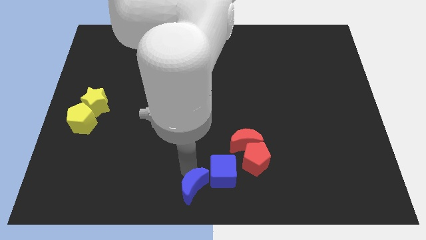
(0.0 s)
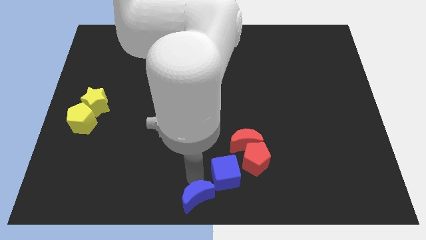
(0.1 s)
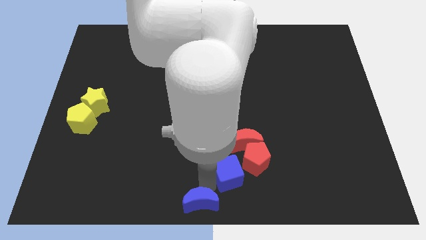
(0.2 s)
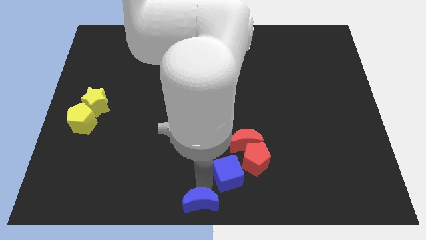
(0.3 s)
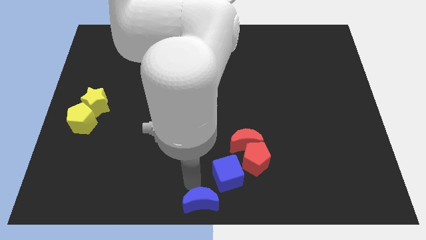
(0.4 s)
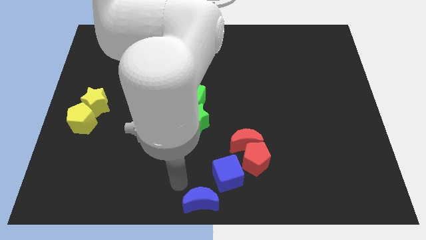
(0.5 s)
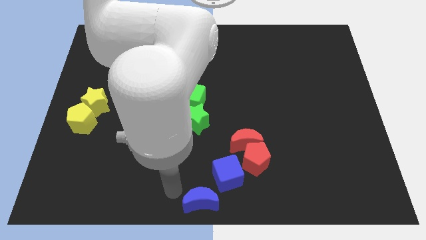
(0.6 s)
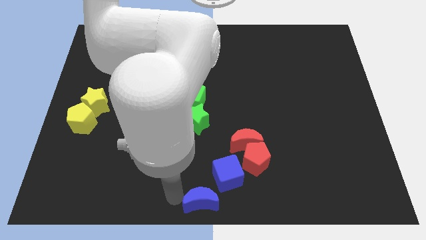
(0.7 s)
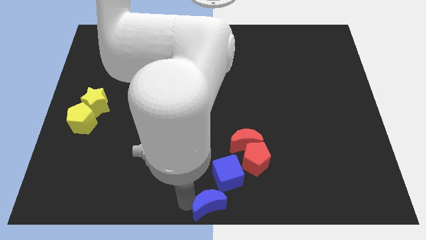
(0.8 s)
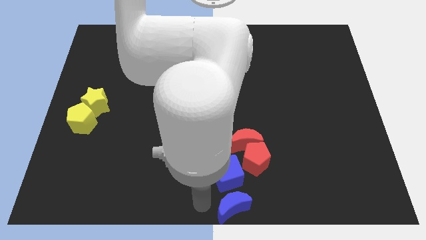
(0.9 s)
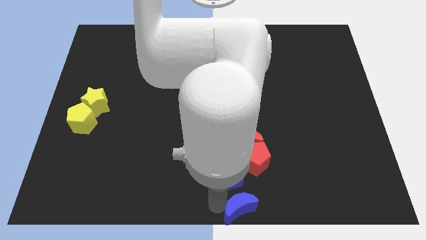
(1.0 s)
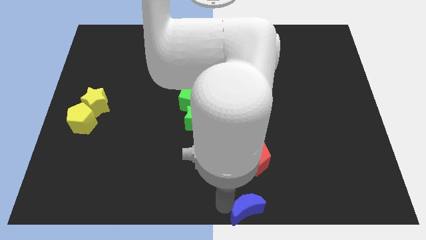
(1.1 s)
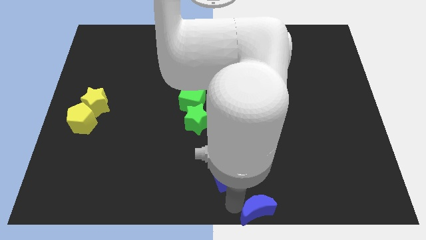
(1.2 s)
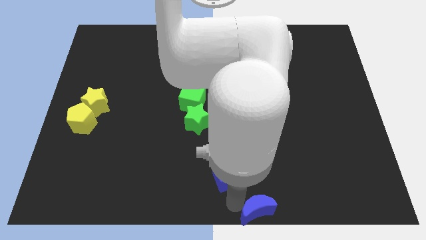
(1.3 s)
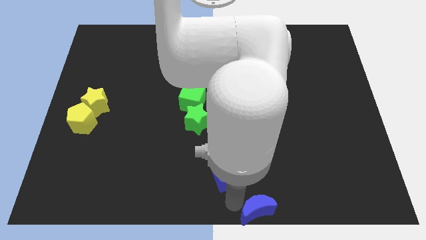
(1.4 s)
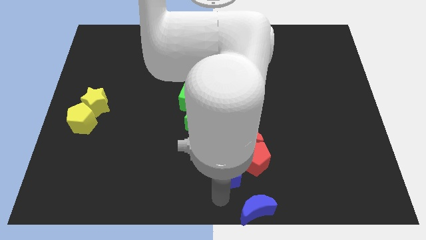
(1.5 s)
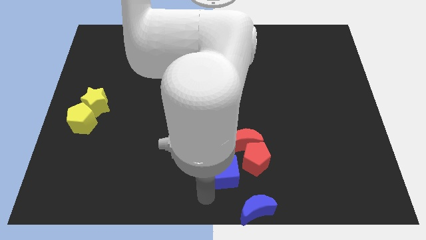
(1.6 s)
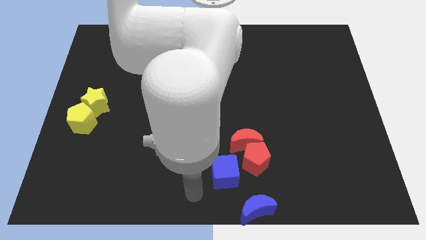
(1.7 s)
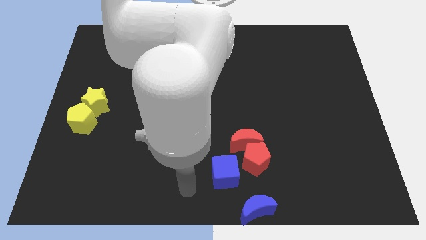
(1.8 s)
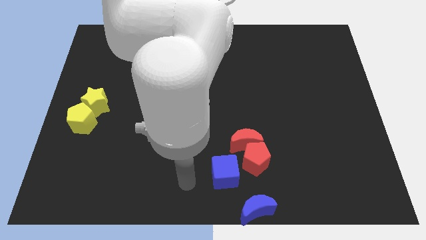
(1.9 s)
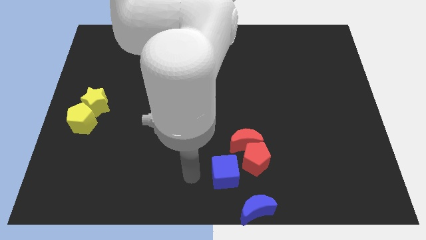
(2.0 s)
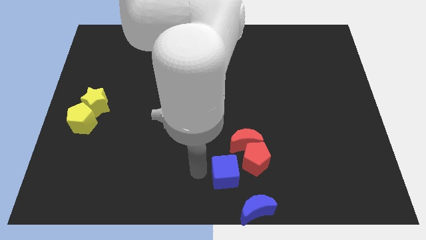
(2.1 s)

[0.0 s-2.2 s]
separate blue moon from blue cube

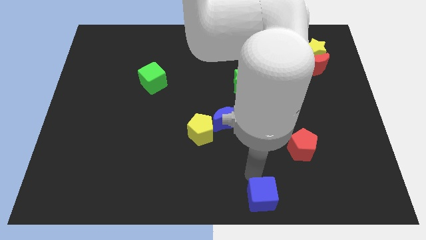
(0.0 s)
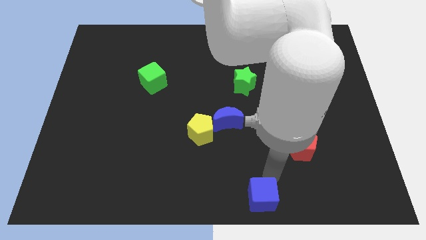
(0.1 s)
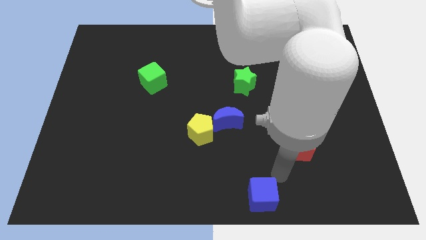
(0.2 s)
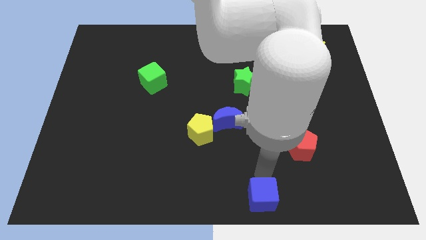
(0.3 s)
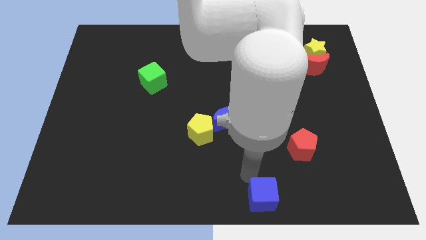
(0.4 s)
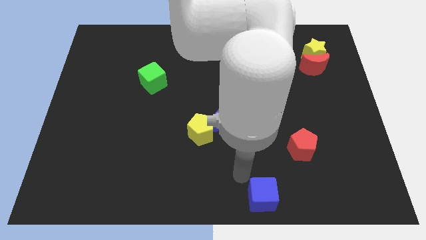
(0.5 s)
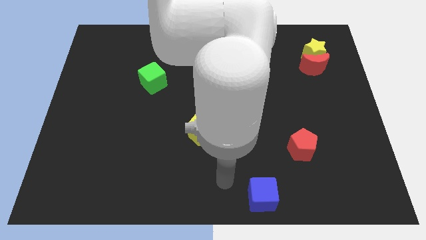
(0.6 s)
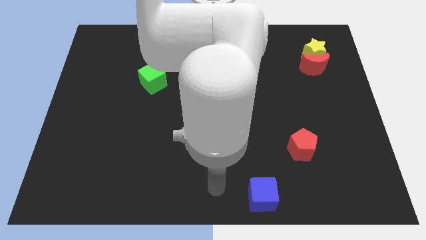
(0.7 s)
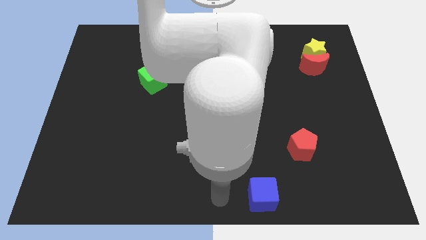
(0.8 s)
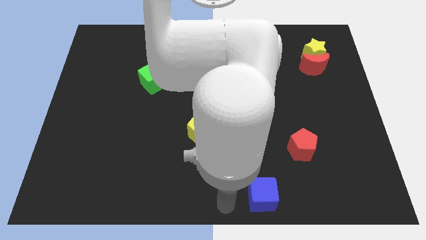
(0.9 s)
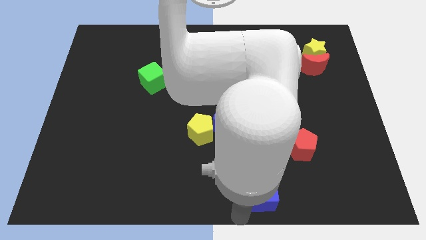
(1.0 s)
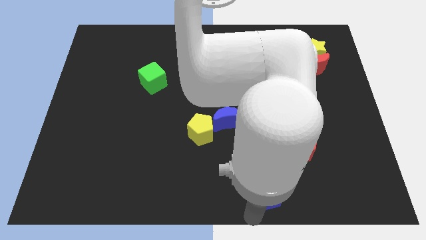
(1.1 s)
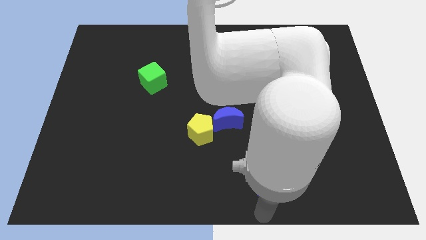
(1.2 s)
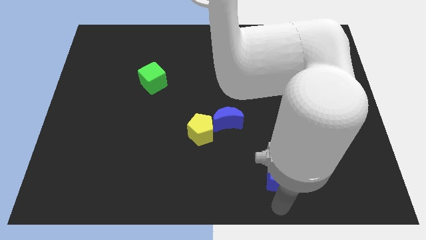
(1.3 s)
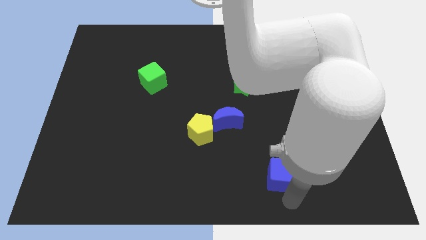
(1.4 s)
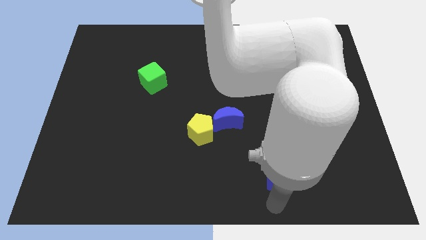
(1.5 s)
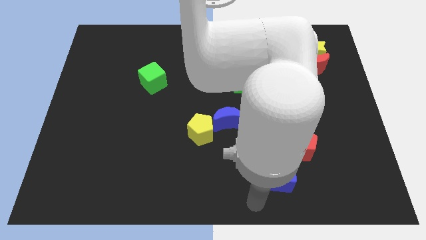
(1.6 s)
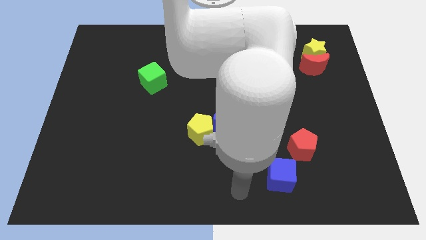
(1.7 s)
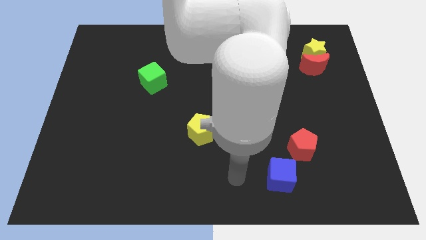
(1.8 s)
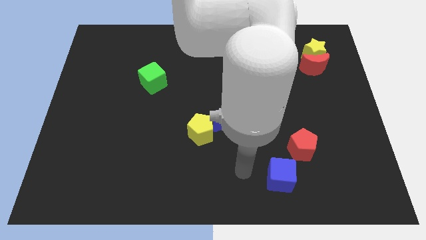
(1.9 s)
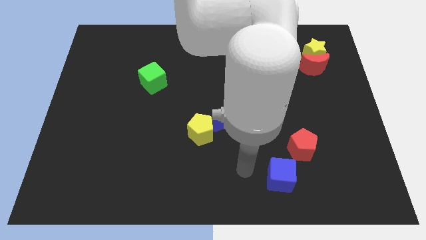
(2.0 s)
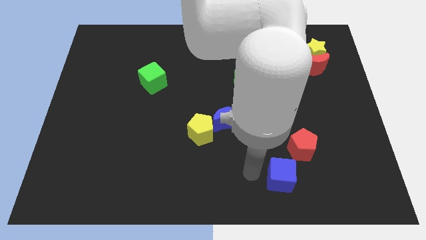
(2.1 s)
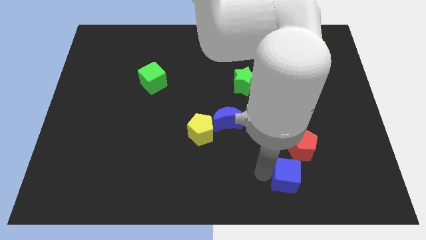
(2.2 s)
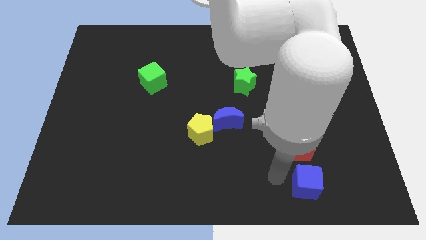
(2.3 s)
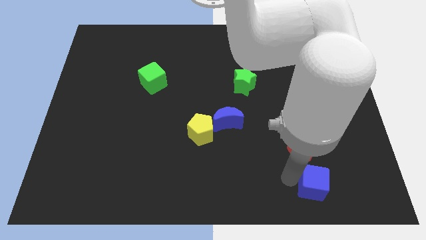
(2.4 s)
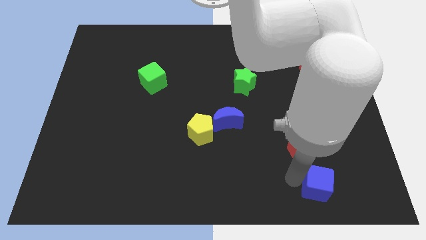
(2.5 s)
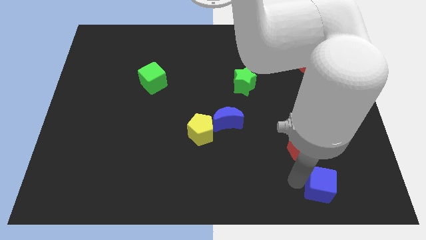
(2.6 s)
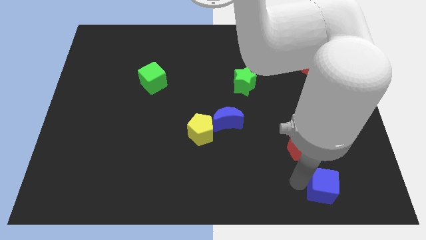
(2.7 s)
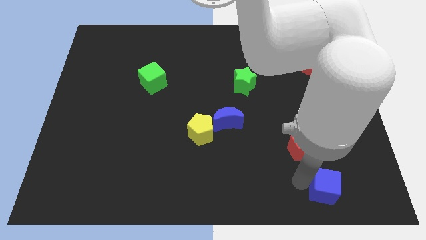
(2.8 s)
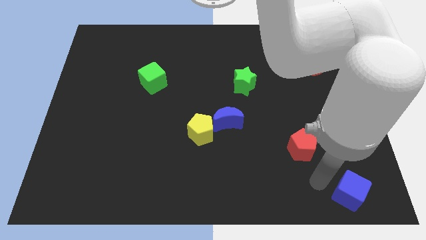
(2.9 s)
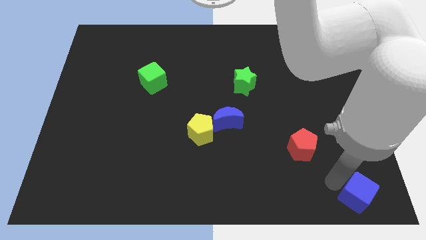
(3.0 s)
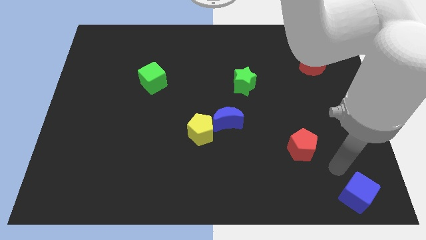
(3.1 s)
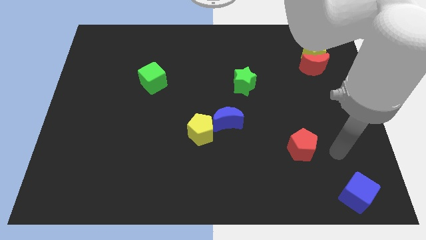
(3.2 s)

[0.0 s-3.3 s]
push the blue cube to the bottom right of the red pentagon

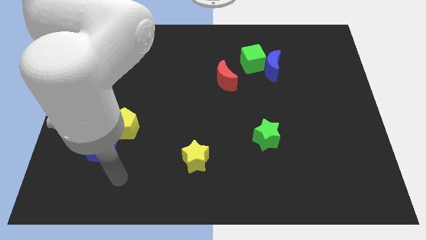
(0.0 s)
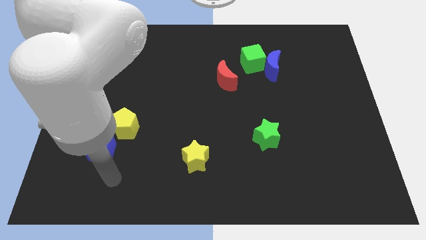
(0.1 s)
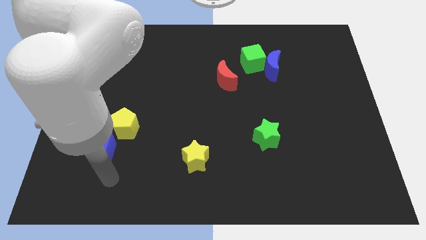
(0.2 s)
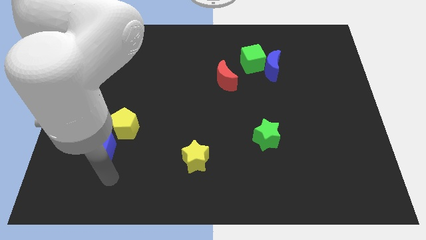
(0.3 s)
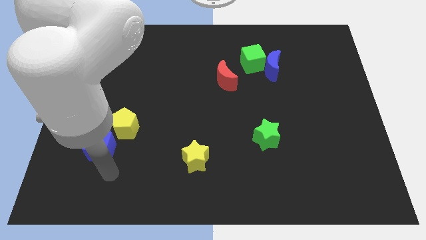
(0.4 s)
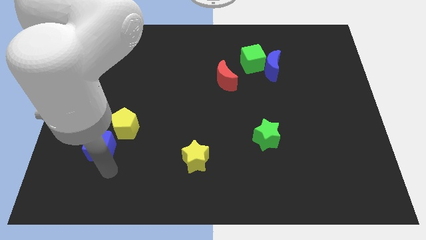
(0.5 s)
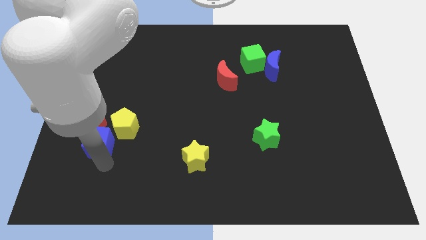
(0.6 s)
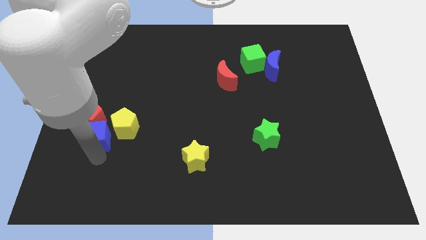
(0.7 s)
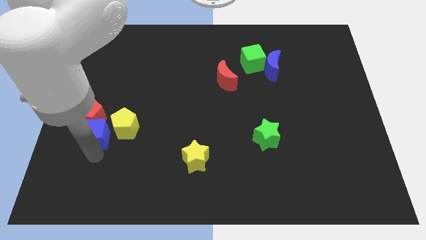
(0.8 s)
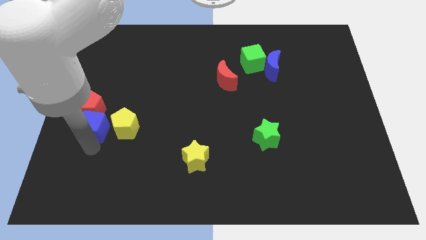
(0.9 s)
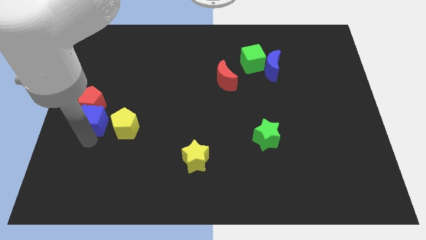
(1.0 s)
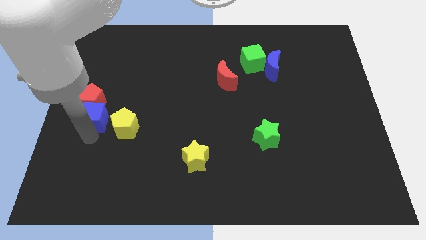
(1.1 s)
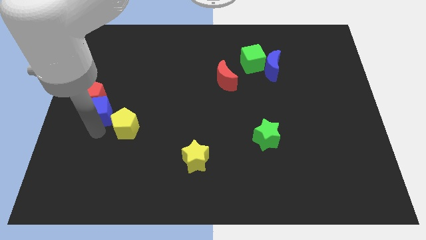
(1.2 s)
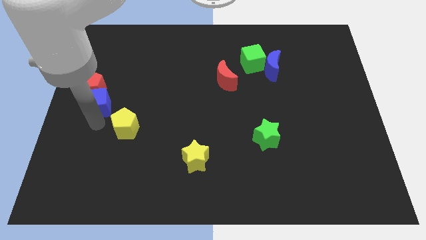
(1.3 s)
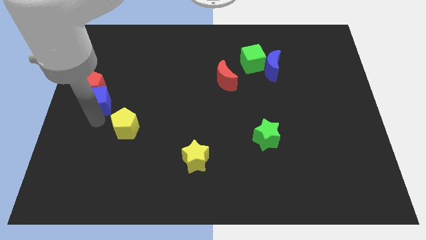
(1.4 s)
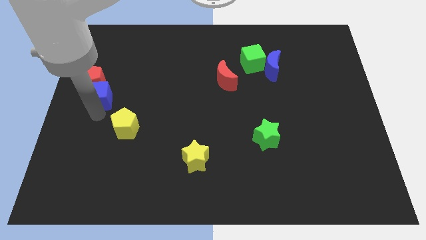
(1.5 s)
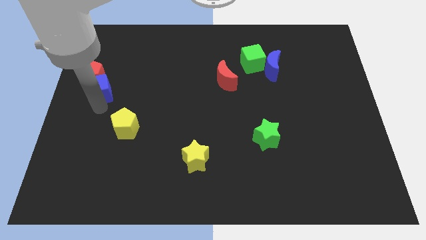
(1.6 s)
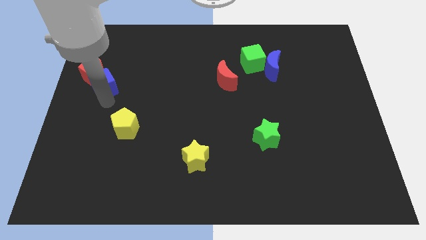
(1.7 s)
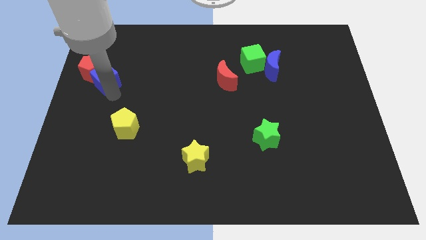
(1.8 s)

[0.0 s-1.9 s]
slide the blue cube and the red pentagon towards the top left

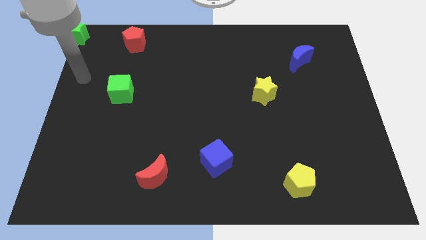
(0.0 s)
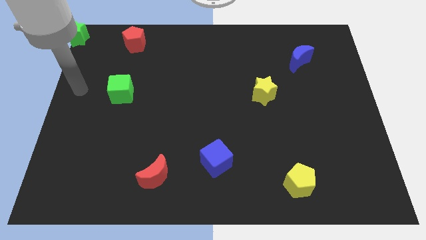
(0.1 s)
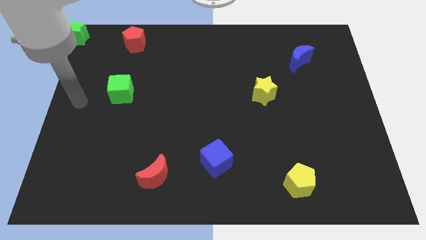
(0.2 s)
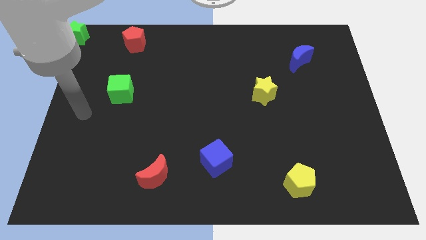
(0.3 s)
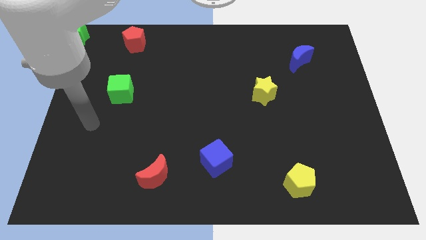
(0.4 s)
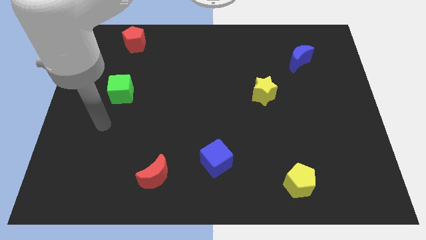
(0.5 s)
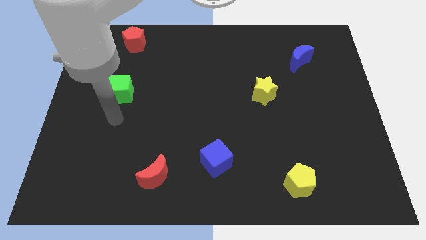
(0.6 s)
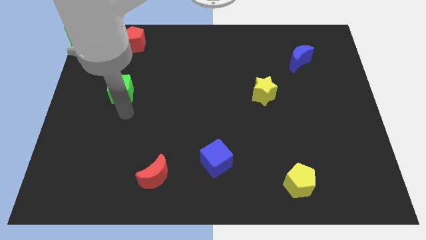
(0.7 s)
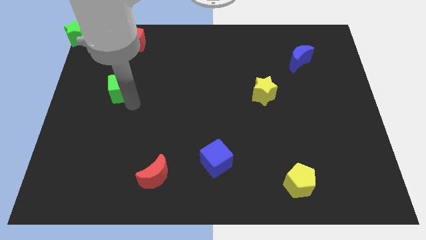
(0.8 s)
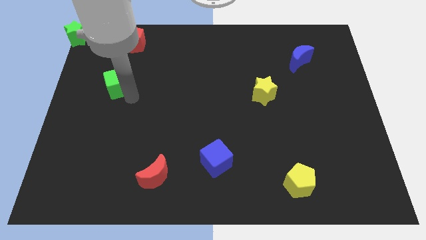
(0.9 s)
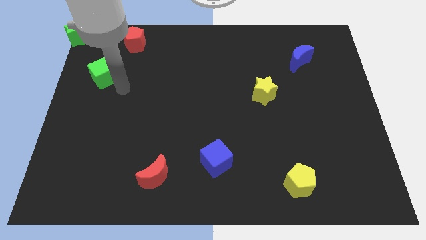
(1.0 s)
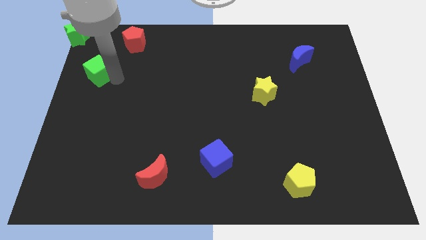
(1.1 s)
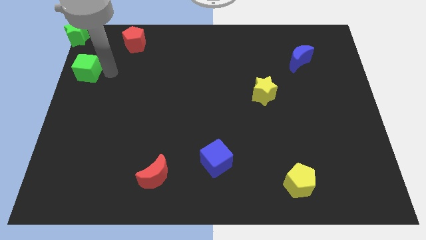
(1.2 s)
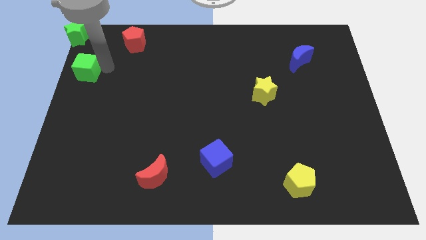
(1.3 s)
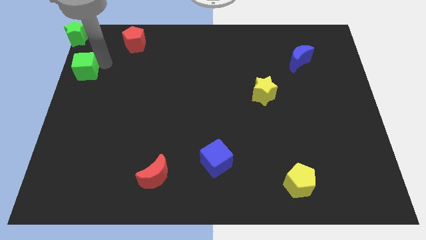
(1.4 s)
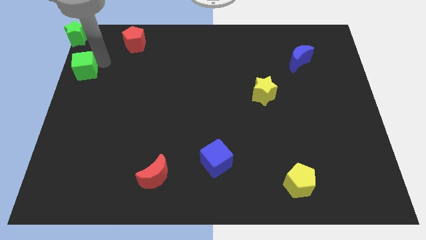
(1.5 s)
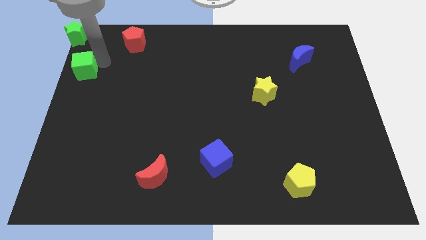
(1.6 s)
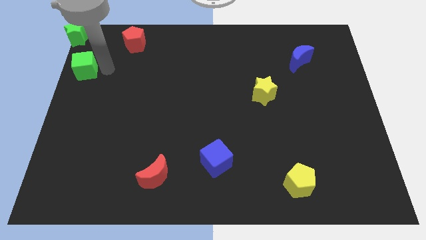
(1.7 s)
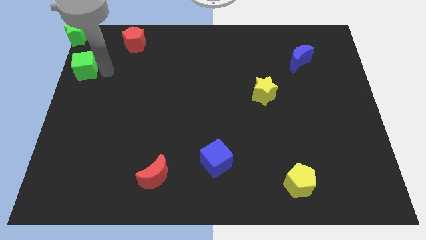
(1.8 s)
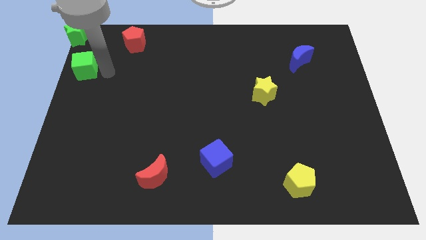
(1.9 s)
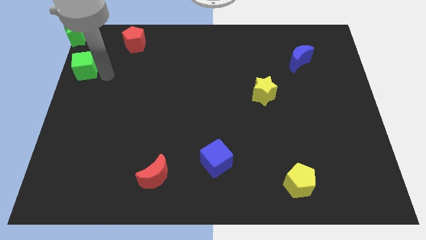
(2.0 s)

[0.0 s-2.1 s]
move the green cube diagonally to the bottom left of the red pentagon
